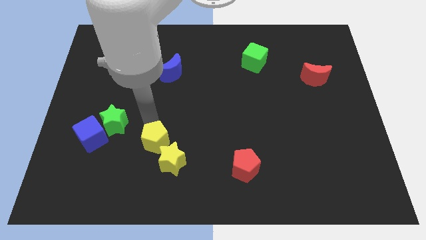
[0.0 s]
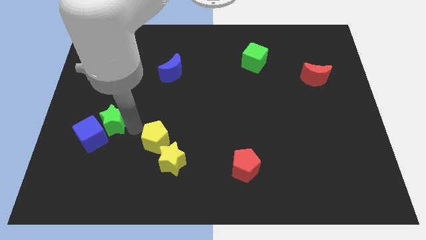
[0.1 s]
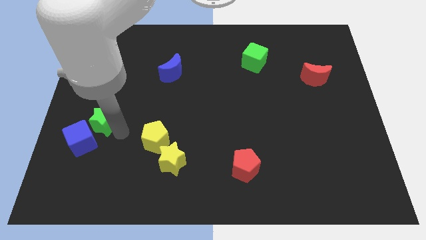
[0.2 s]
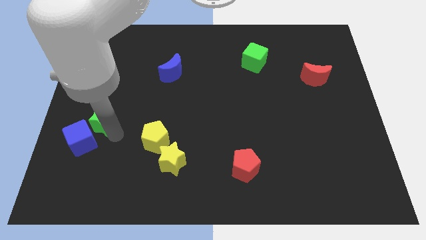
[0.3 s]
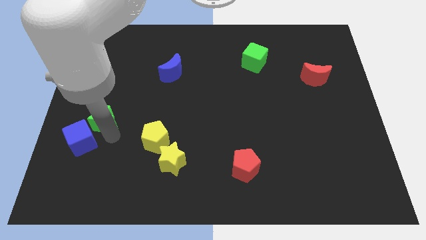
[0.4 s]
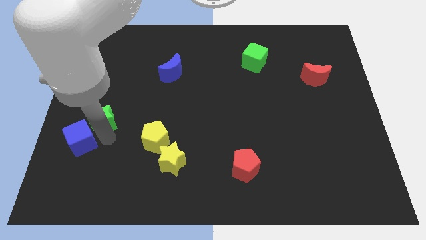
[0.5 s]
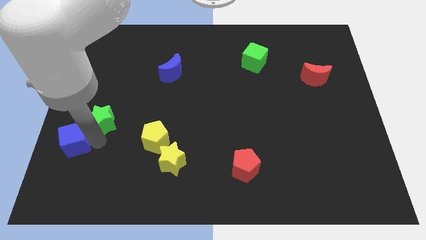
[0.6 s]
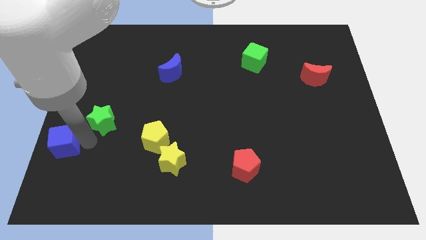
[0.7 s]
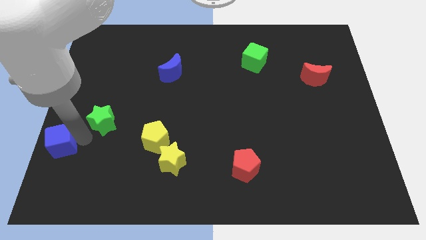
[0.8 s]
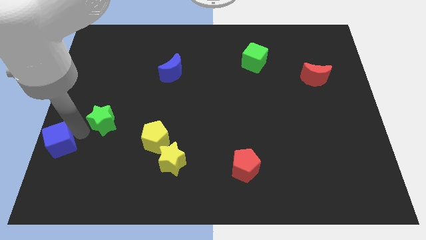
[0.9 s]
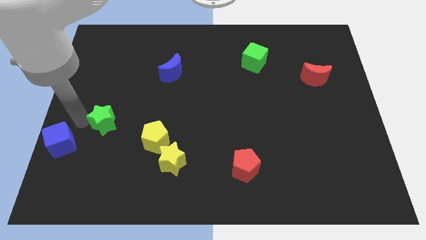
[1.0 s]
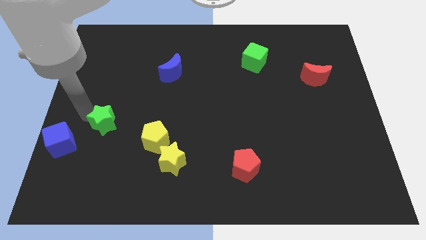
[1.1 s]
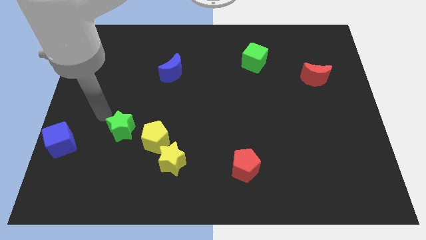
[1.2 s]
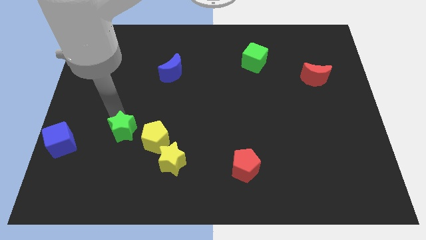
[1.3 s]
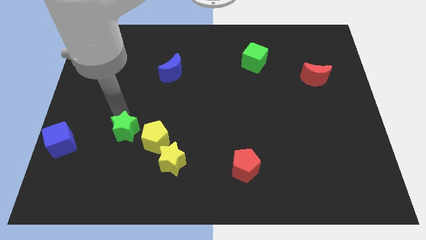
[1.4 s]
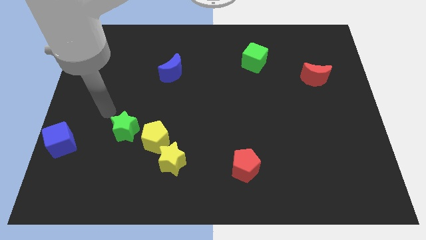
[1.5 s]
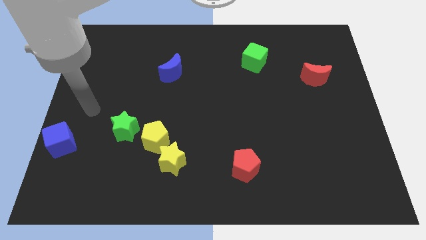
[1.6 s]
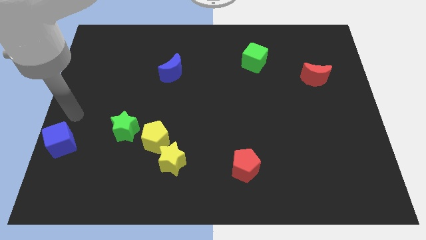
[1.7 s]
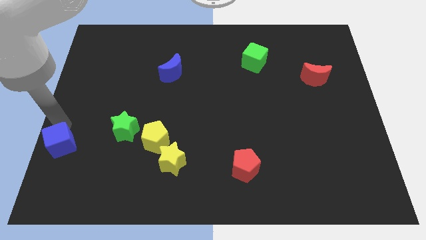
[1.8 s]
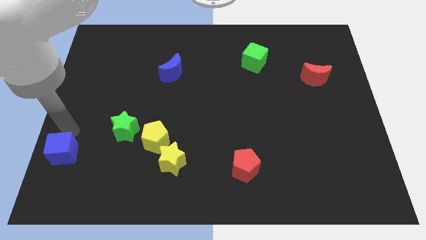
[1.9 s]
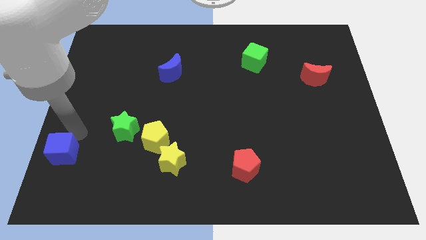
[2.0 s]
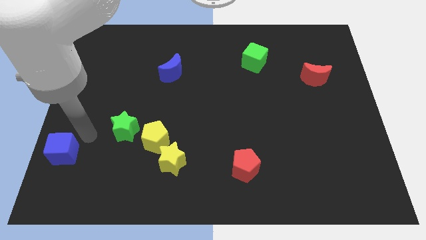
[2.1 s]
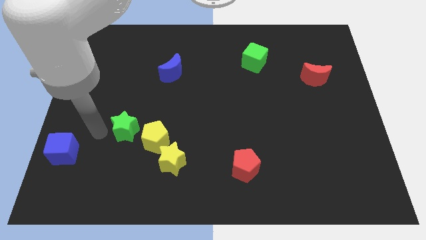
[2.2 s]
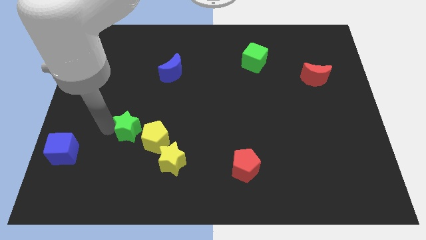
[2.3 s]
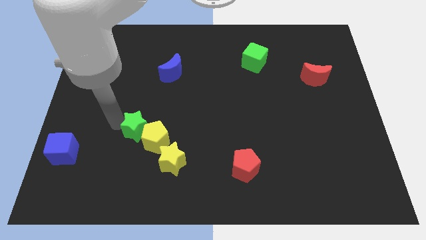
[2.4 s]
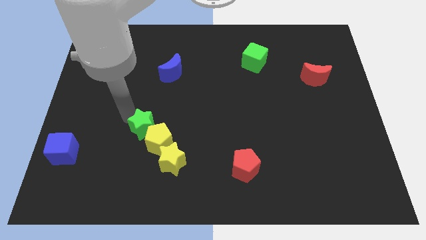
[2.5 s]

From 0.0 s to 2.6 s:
separate the green star from the blue cube

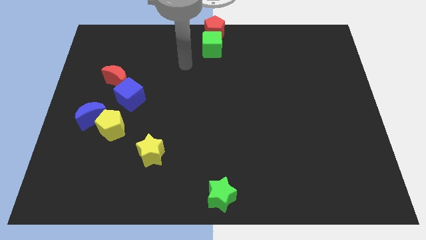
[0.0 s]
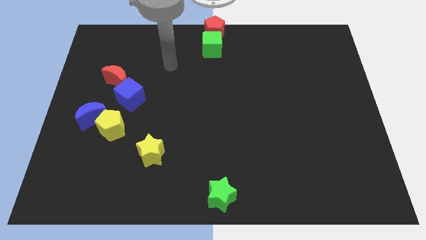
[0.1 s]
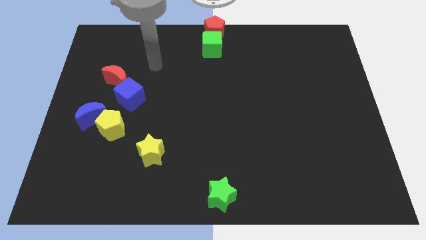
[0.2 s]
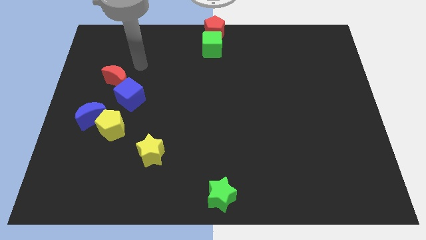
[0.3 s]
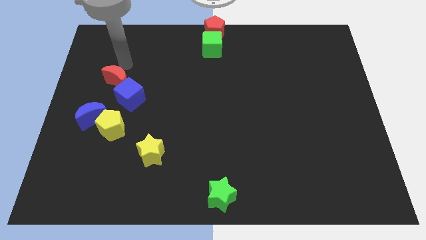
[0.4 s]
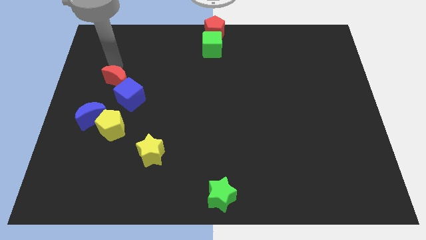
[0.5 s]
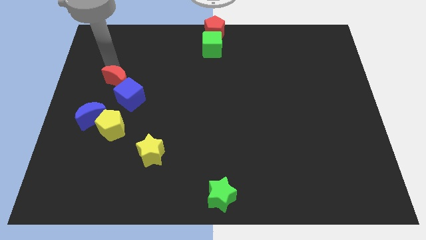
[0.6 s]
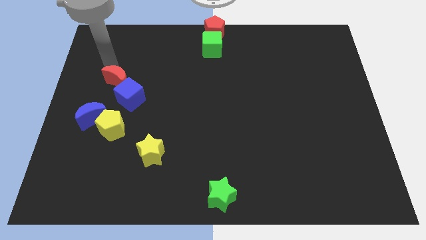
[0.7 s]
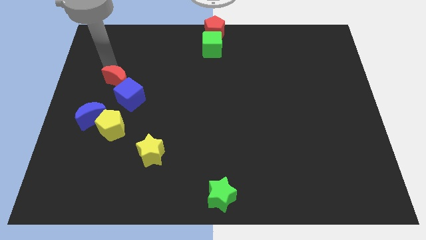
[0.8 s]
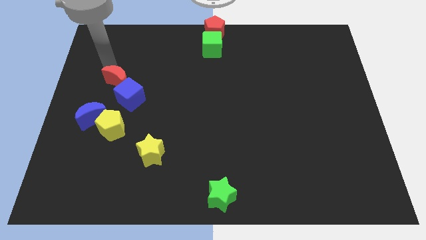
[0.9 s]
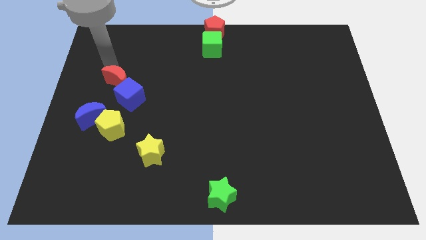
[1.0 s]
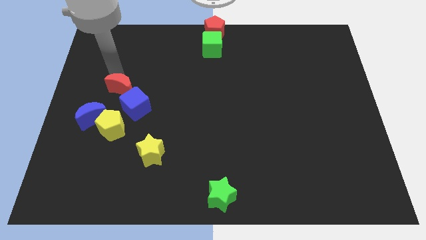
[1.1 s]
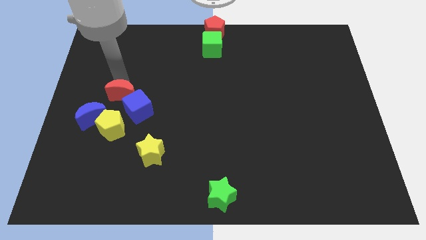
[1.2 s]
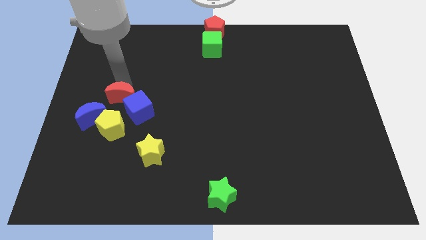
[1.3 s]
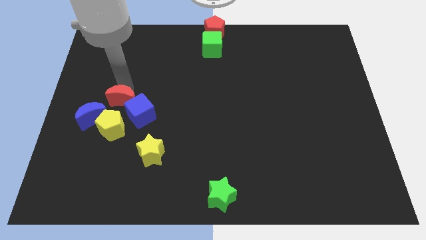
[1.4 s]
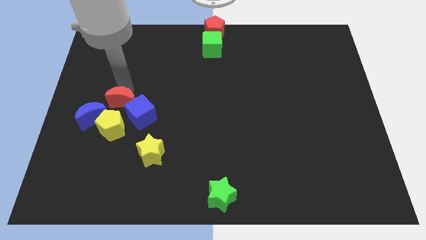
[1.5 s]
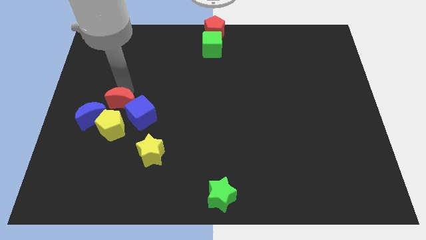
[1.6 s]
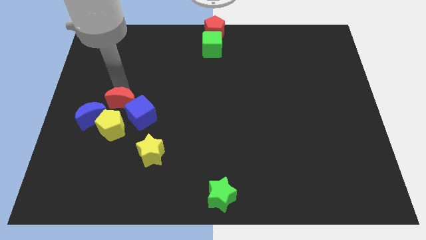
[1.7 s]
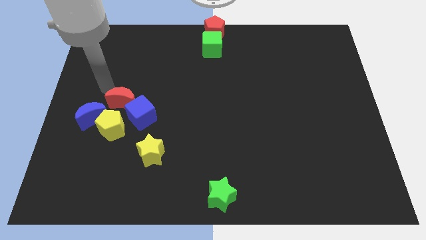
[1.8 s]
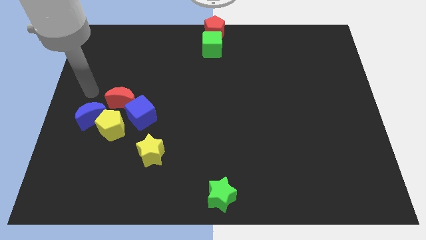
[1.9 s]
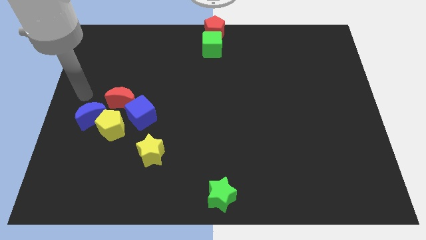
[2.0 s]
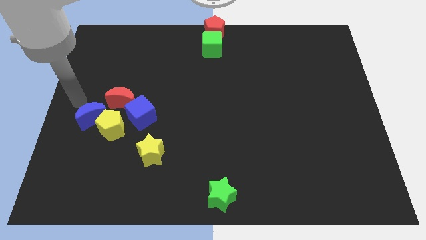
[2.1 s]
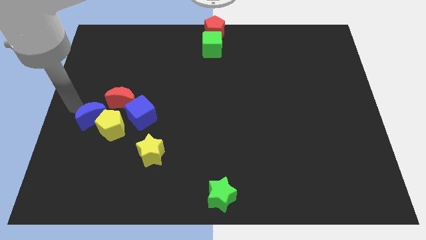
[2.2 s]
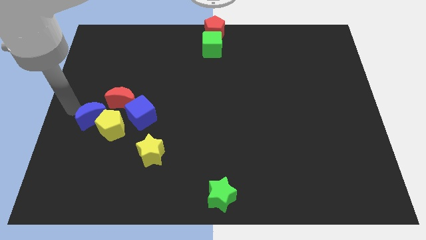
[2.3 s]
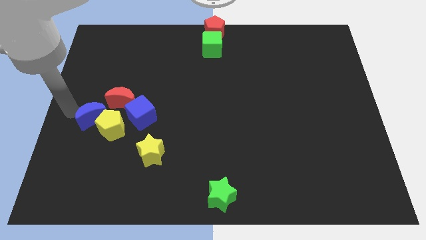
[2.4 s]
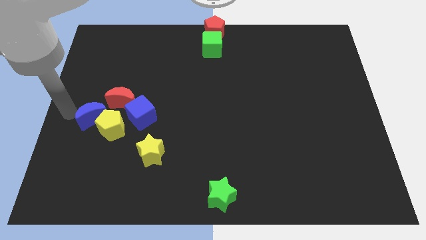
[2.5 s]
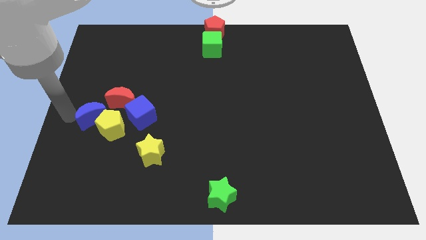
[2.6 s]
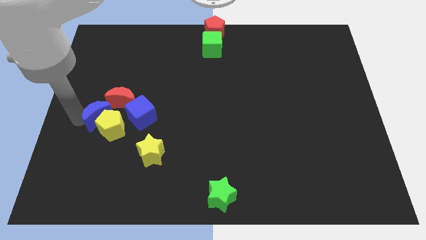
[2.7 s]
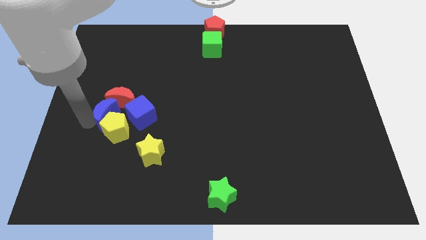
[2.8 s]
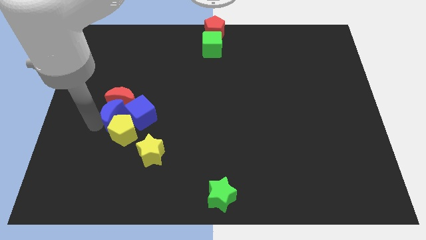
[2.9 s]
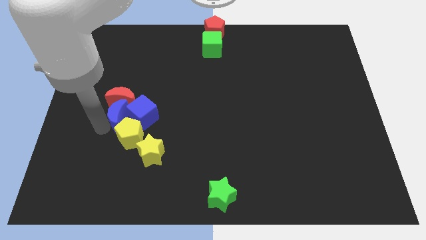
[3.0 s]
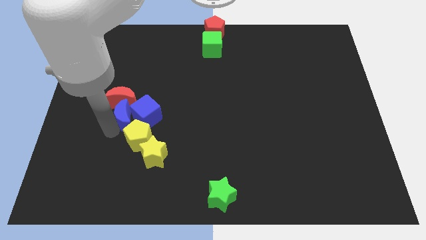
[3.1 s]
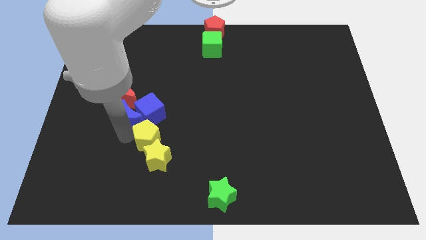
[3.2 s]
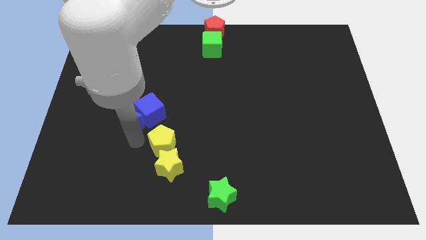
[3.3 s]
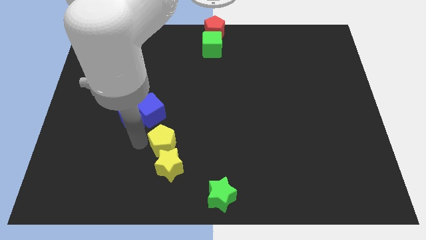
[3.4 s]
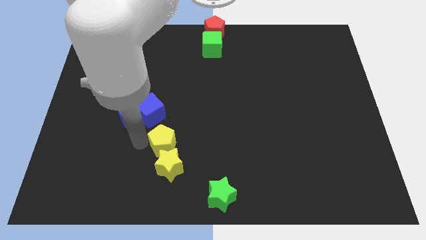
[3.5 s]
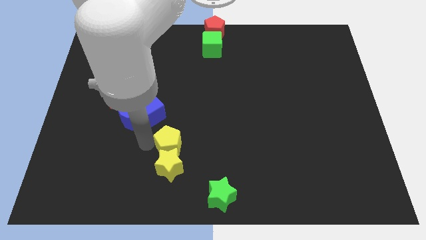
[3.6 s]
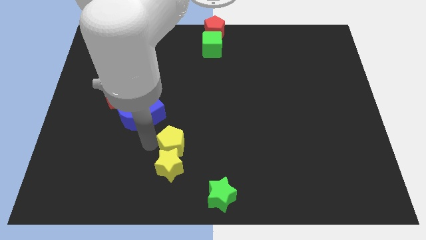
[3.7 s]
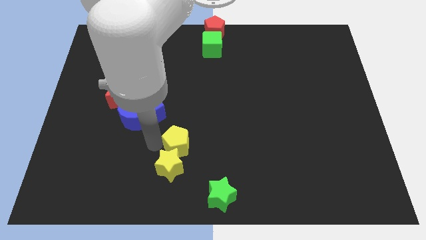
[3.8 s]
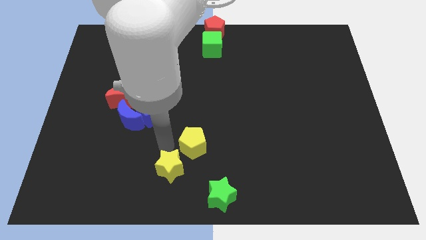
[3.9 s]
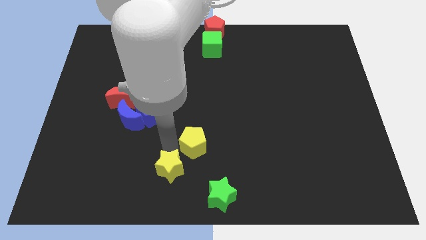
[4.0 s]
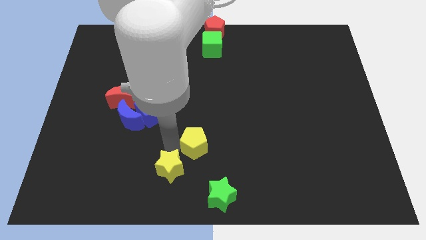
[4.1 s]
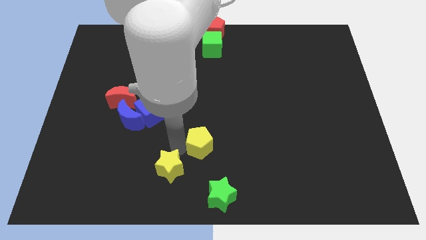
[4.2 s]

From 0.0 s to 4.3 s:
separate yellow blocks from red and blue blocks

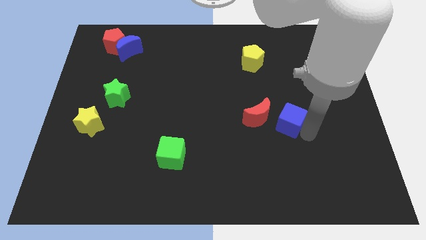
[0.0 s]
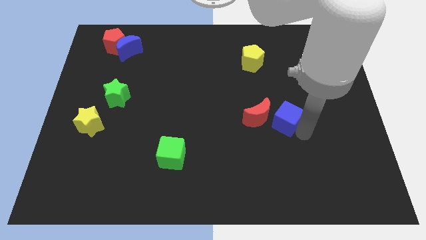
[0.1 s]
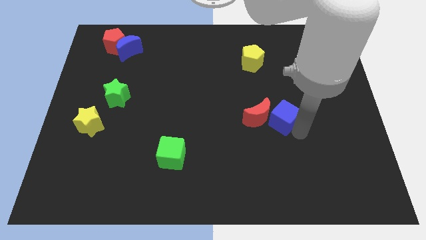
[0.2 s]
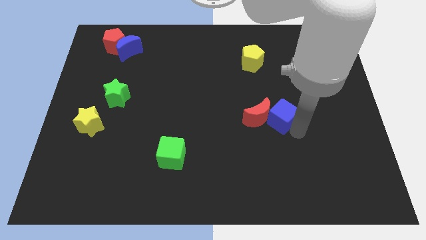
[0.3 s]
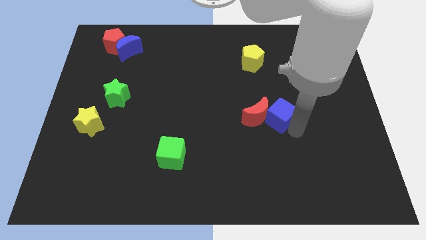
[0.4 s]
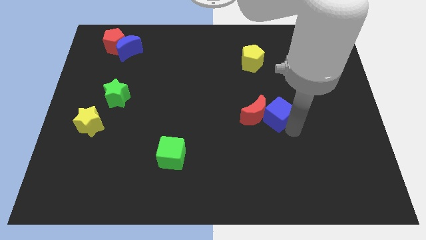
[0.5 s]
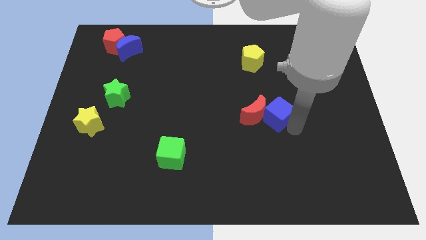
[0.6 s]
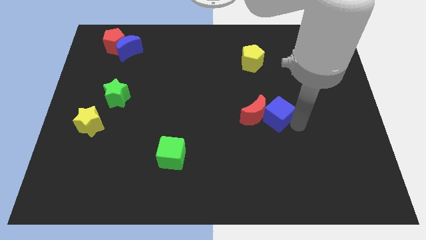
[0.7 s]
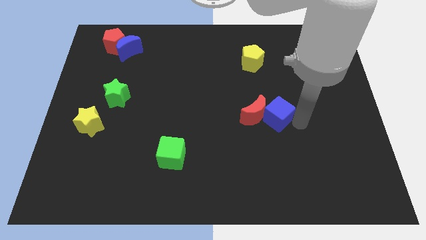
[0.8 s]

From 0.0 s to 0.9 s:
push the blue cube into the red moon

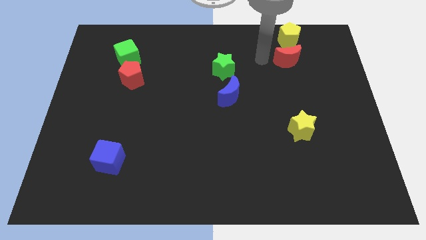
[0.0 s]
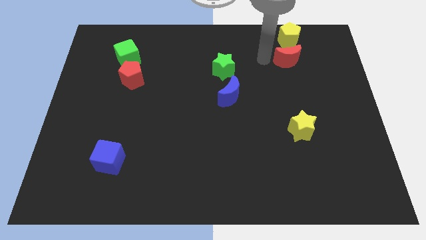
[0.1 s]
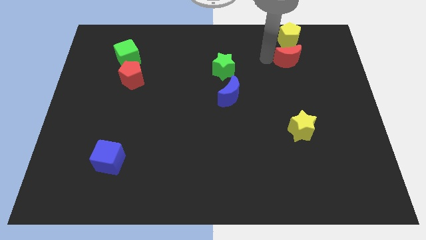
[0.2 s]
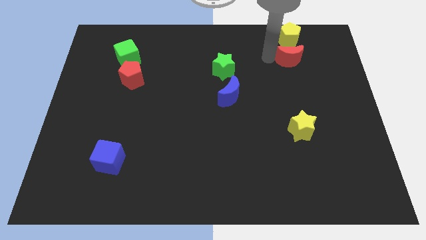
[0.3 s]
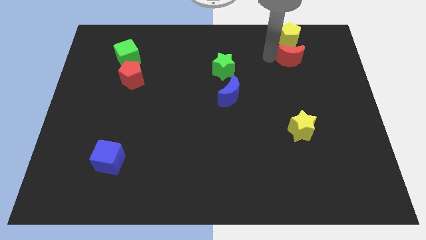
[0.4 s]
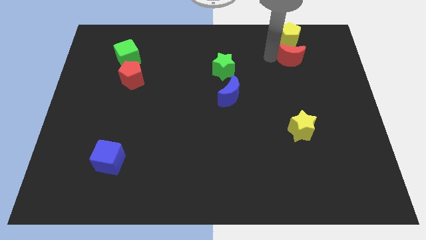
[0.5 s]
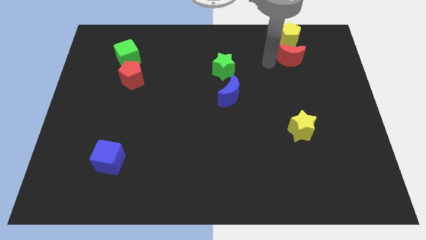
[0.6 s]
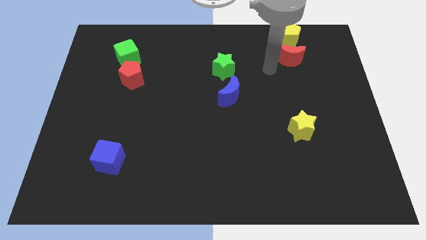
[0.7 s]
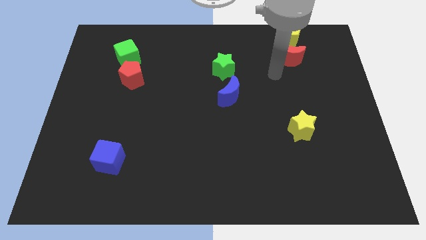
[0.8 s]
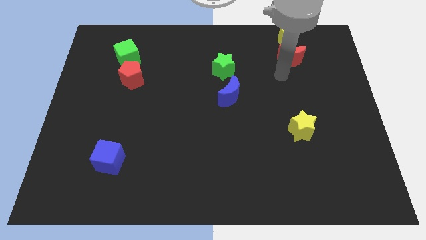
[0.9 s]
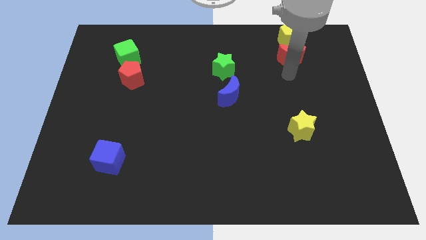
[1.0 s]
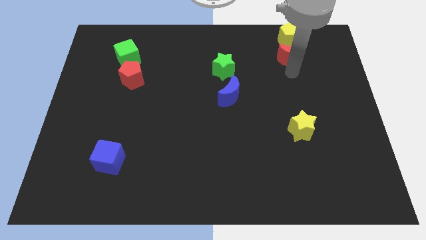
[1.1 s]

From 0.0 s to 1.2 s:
move red pentagon into yellow pentagon

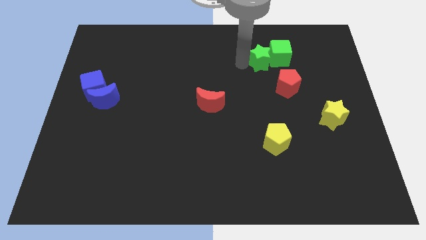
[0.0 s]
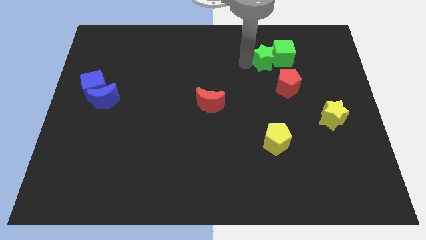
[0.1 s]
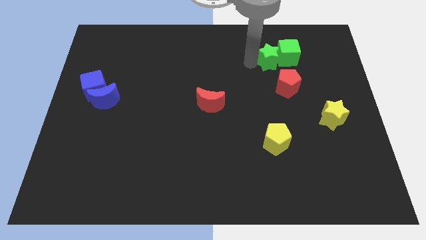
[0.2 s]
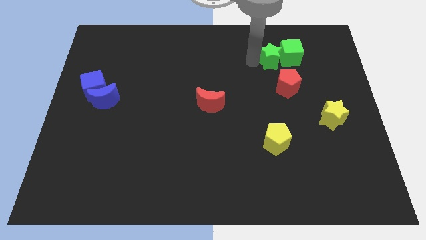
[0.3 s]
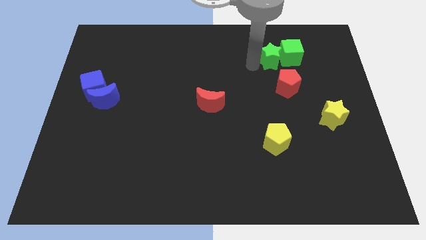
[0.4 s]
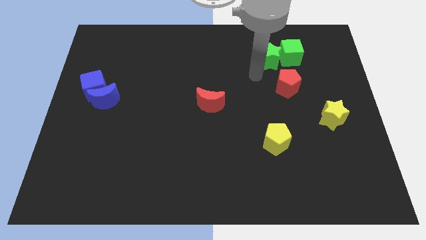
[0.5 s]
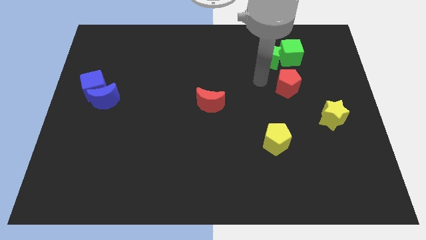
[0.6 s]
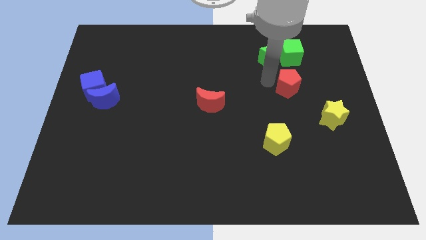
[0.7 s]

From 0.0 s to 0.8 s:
slide the green blocks to the right
